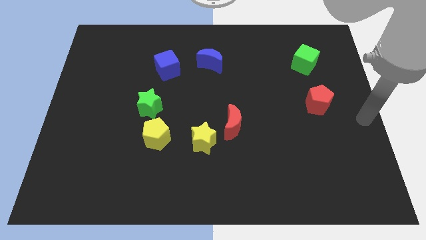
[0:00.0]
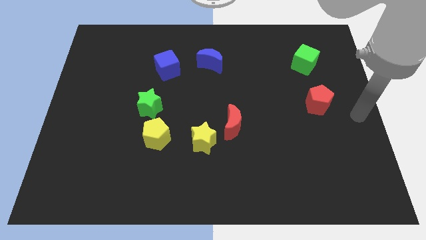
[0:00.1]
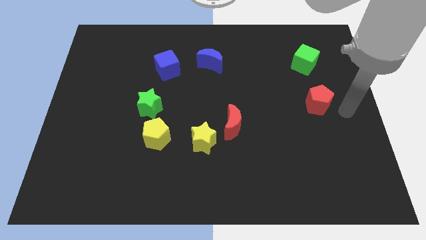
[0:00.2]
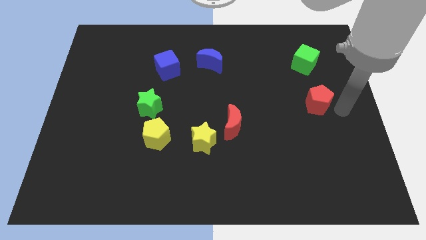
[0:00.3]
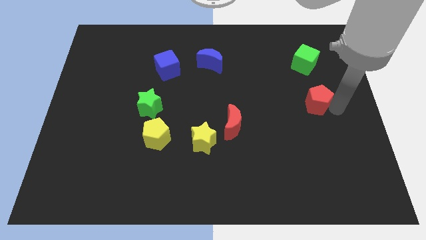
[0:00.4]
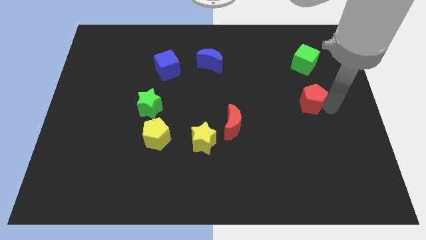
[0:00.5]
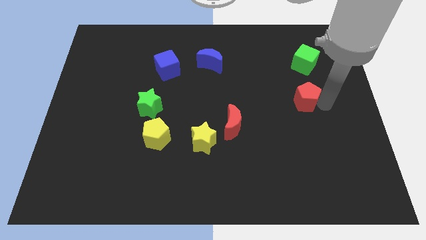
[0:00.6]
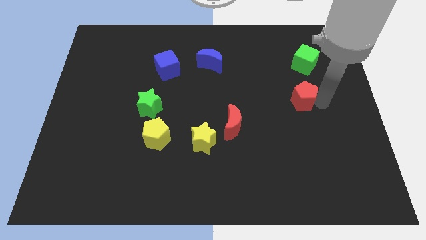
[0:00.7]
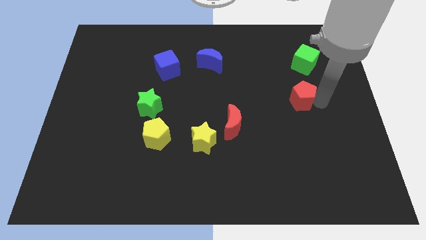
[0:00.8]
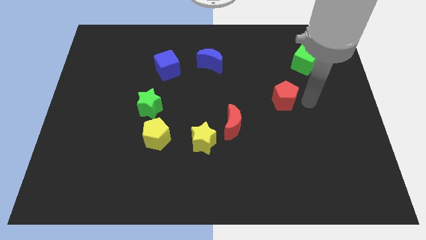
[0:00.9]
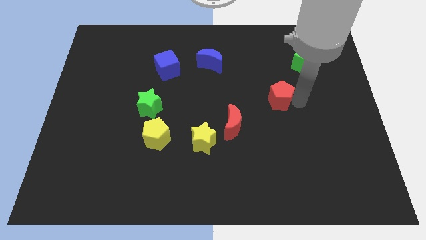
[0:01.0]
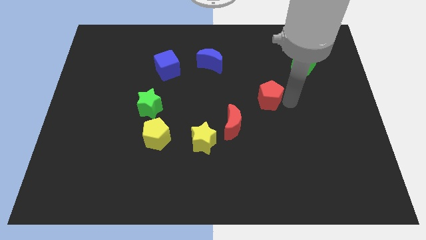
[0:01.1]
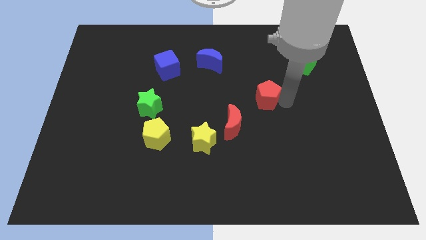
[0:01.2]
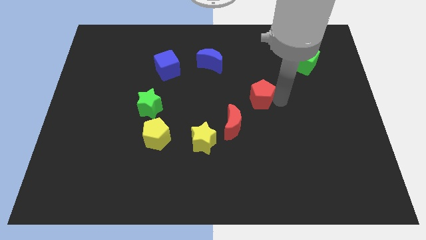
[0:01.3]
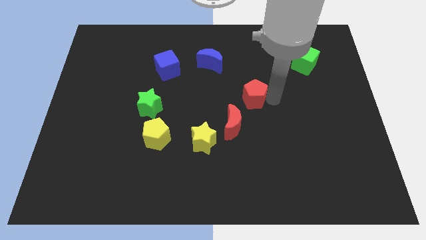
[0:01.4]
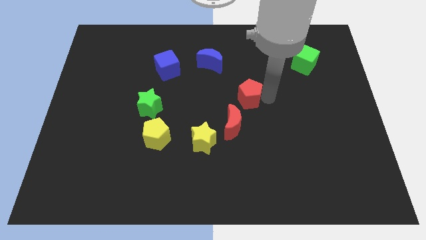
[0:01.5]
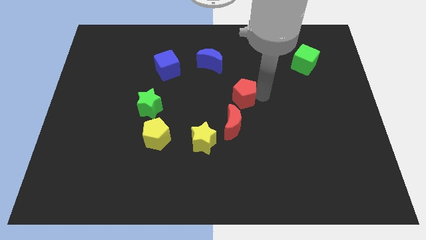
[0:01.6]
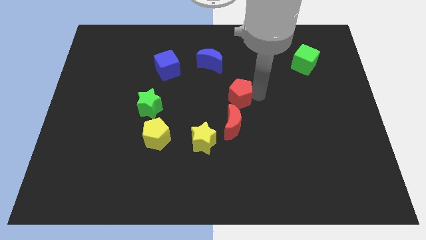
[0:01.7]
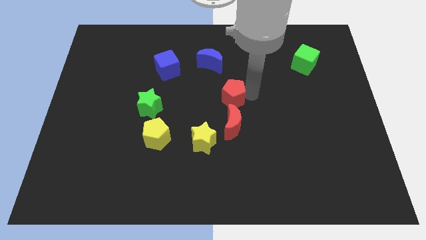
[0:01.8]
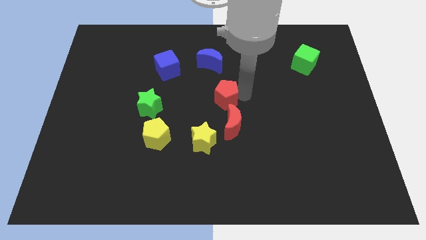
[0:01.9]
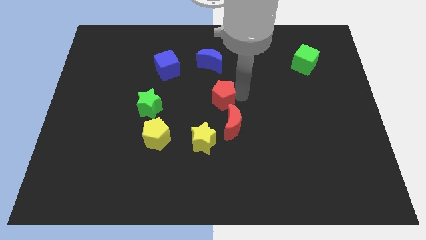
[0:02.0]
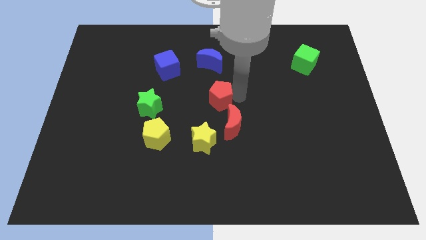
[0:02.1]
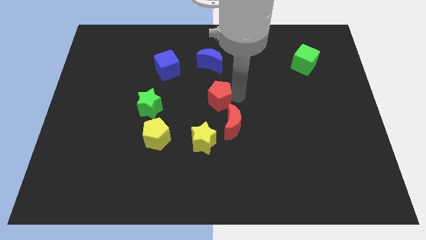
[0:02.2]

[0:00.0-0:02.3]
place red pentagon above red crescent

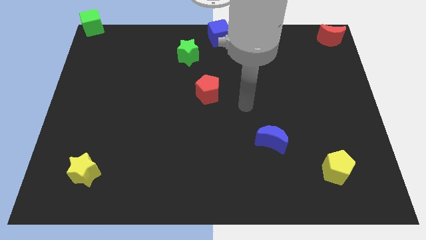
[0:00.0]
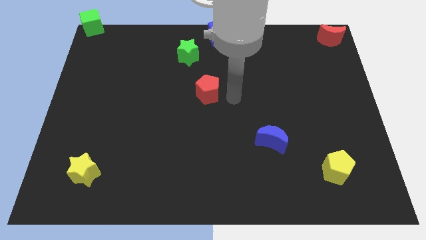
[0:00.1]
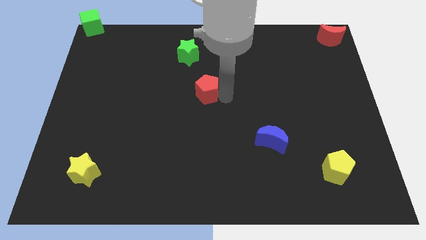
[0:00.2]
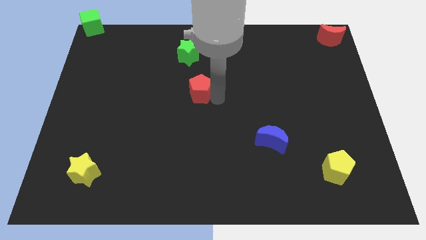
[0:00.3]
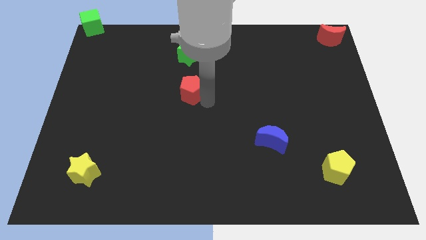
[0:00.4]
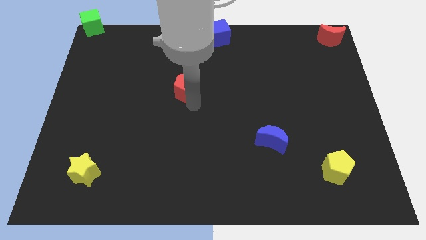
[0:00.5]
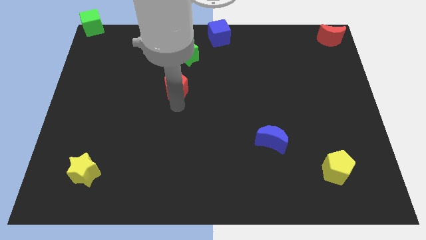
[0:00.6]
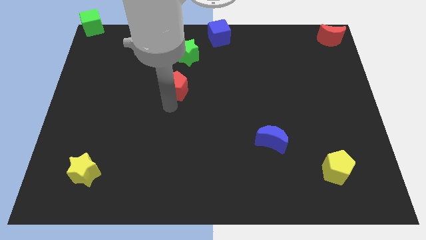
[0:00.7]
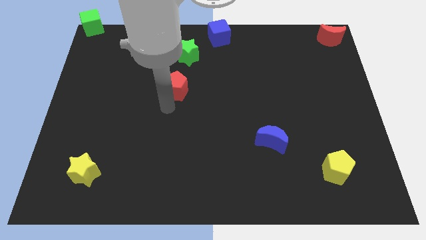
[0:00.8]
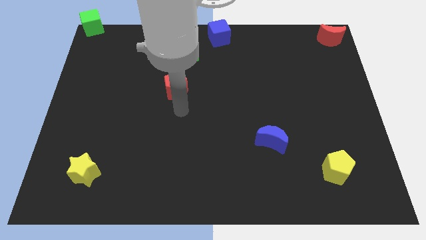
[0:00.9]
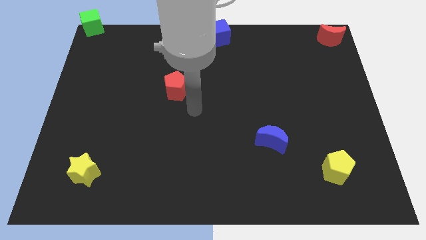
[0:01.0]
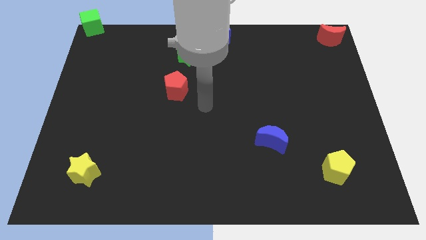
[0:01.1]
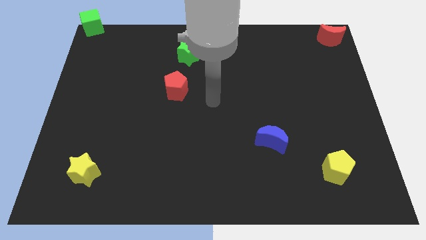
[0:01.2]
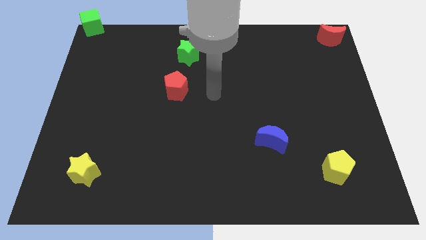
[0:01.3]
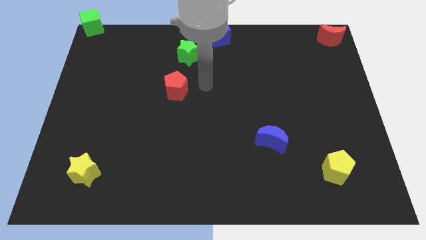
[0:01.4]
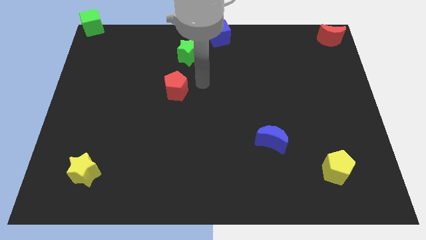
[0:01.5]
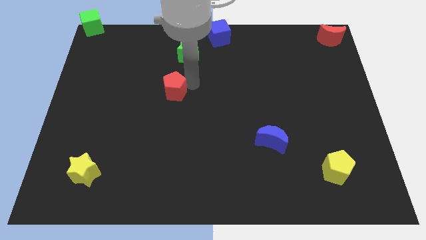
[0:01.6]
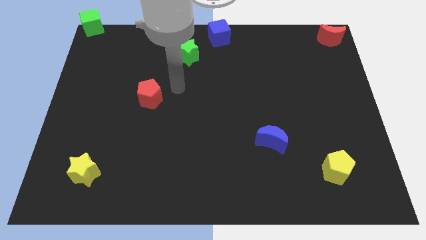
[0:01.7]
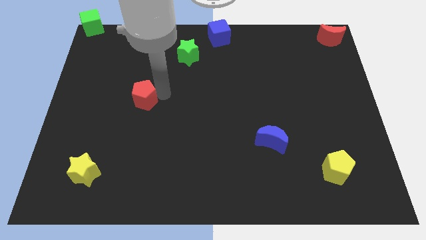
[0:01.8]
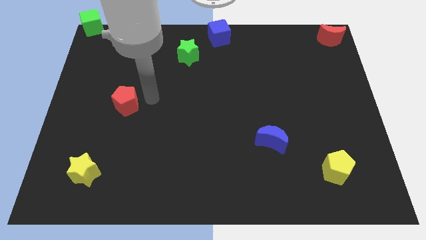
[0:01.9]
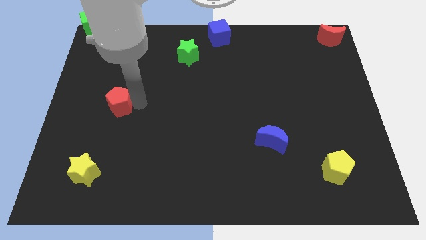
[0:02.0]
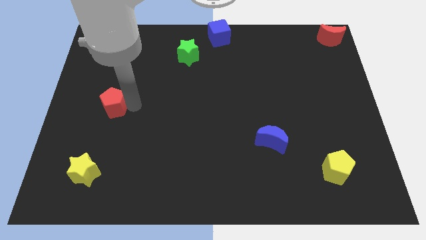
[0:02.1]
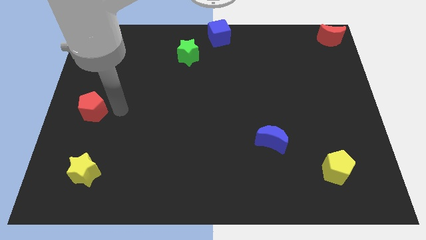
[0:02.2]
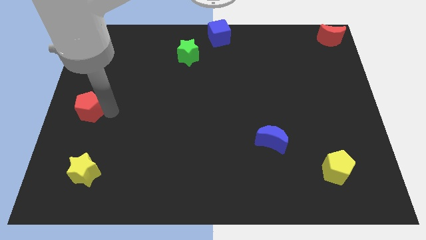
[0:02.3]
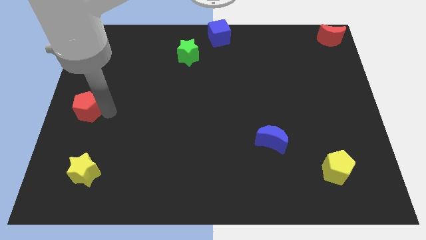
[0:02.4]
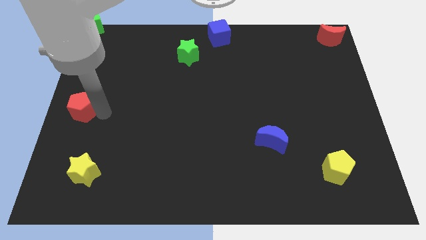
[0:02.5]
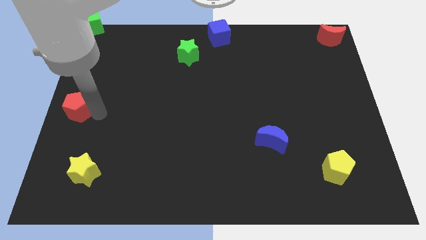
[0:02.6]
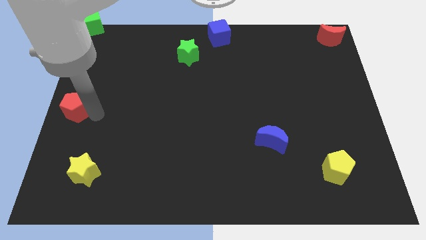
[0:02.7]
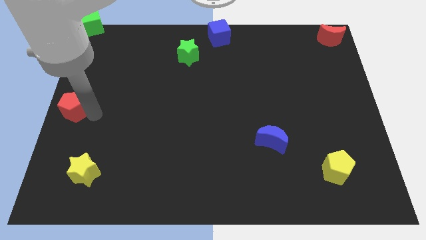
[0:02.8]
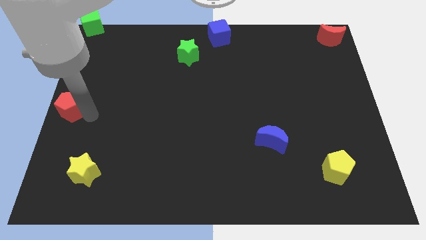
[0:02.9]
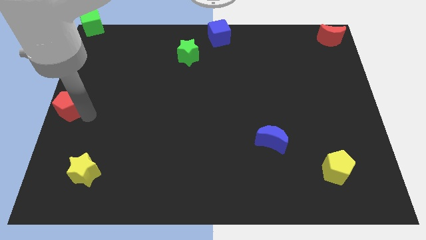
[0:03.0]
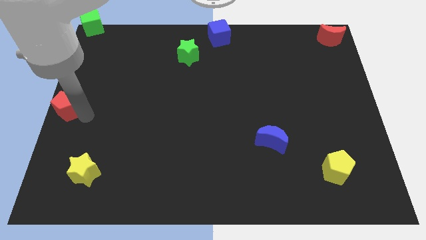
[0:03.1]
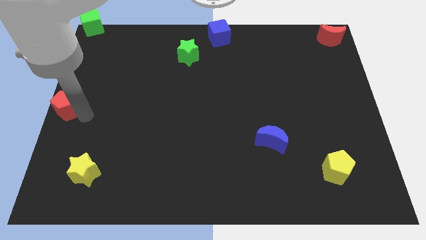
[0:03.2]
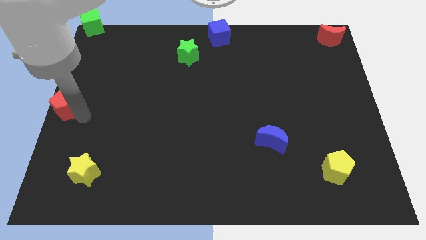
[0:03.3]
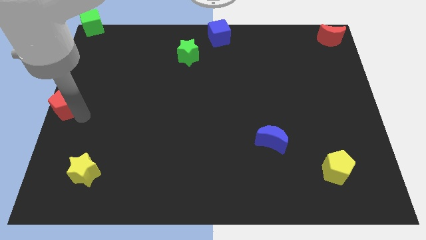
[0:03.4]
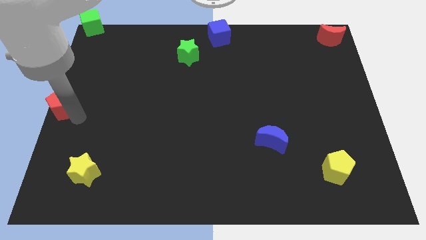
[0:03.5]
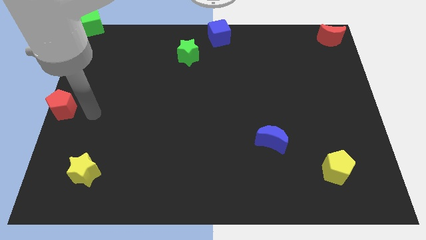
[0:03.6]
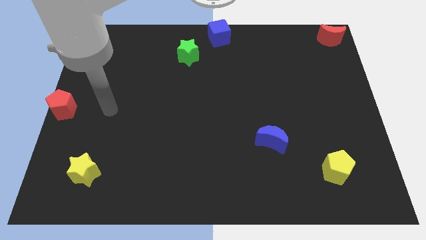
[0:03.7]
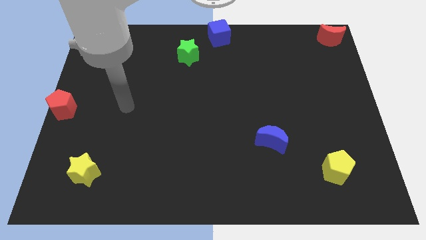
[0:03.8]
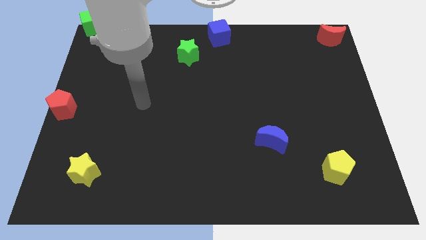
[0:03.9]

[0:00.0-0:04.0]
move red pentagon to the left

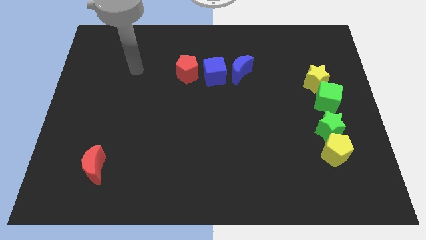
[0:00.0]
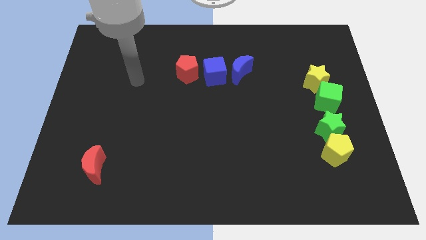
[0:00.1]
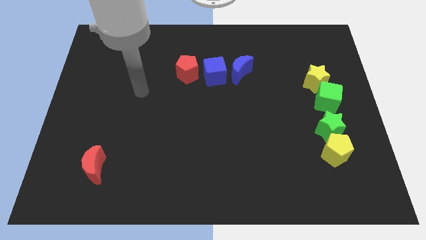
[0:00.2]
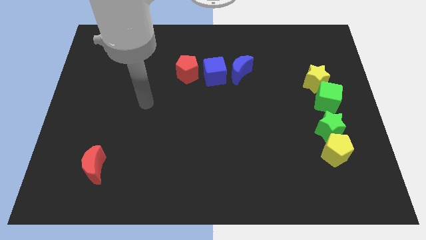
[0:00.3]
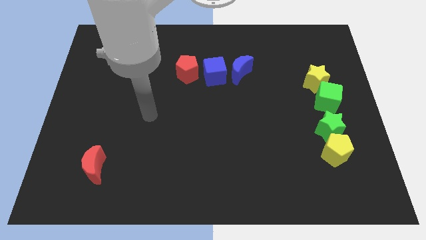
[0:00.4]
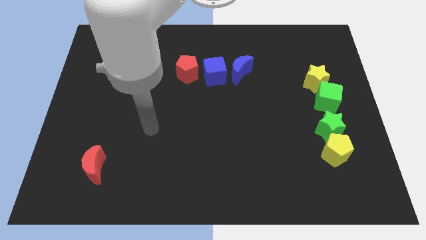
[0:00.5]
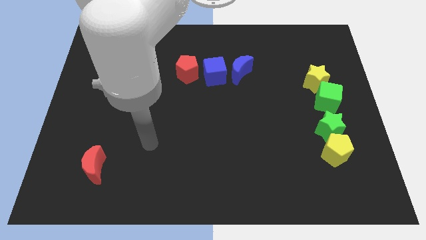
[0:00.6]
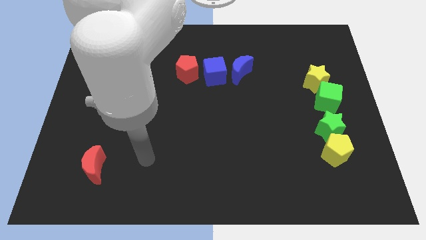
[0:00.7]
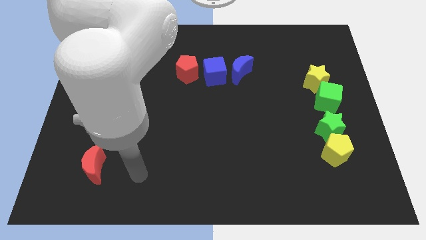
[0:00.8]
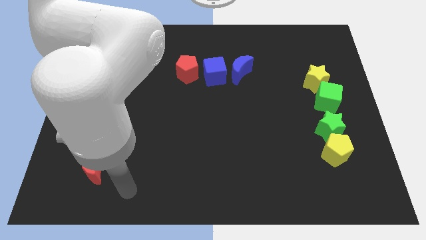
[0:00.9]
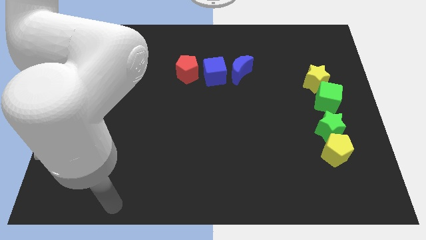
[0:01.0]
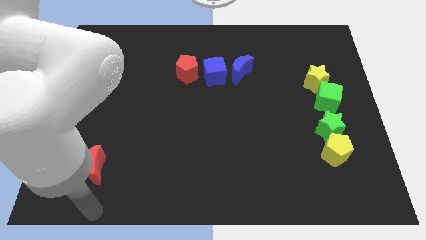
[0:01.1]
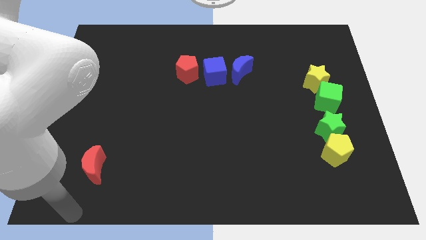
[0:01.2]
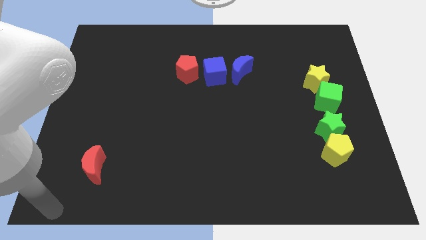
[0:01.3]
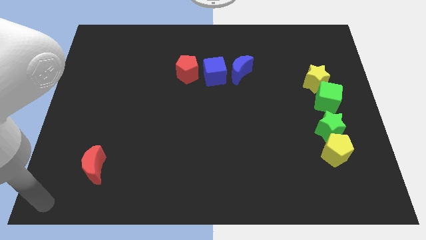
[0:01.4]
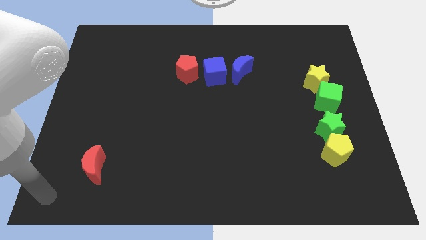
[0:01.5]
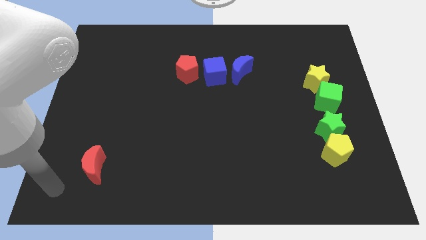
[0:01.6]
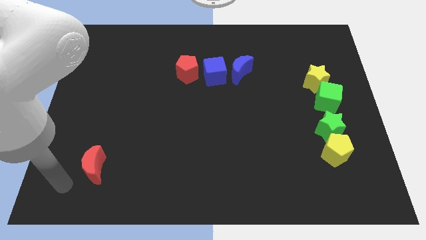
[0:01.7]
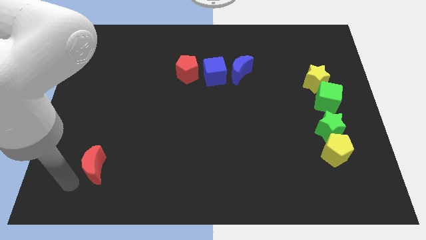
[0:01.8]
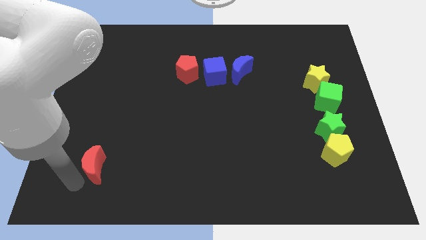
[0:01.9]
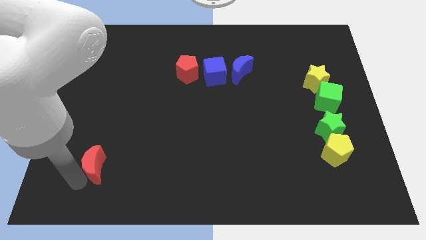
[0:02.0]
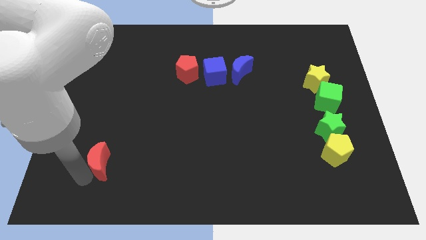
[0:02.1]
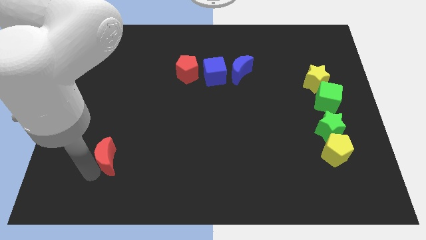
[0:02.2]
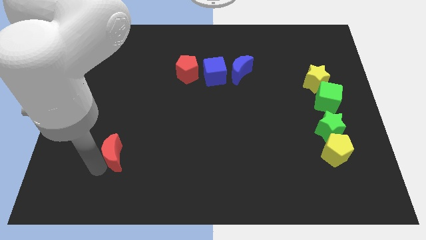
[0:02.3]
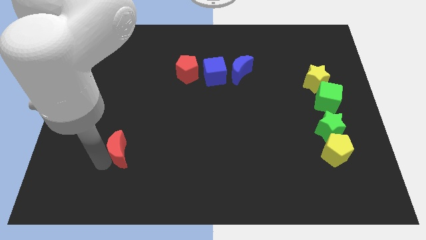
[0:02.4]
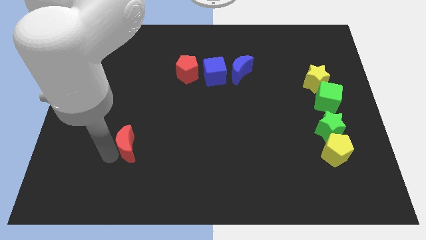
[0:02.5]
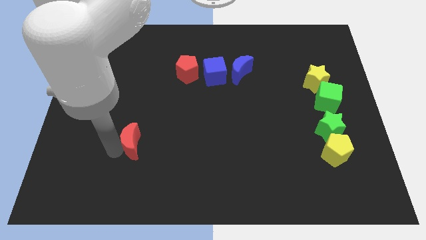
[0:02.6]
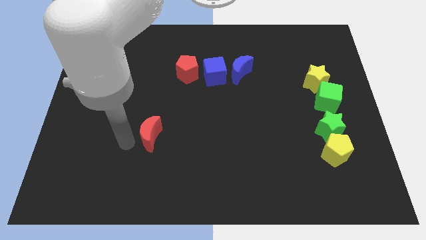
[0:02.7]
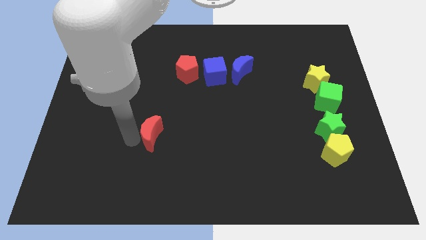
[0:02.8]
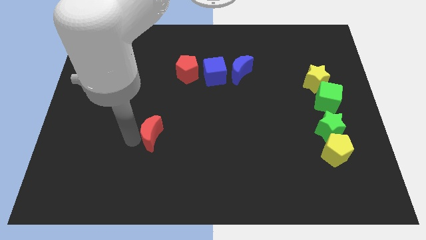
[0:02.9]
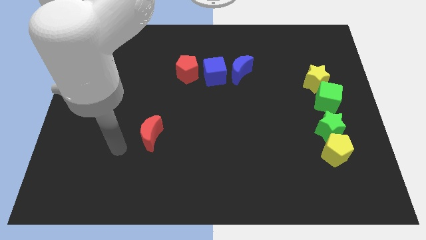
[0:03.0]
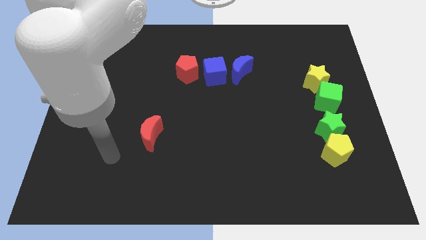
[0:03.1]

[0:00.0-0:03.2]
slide the red moon diagonally top left to the yellow pentagon
